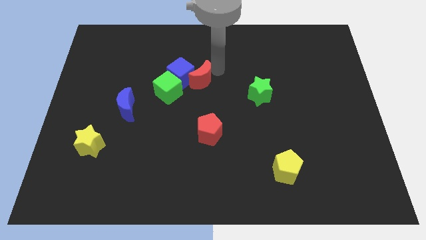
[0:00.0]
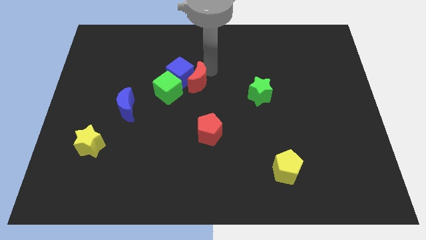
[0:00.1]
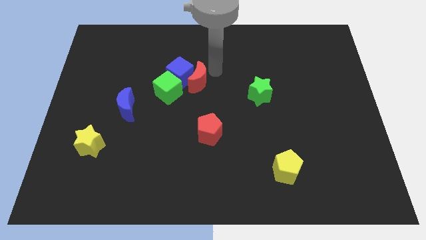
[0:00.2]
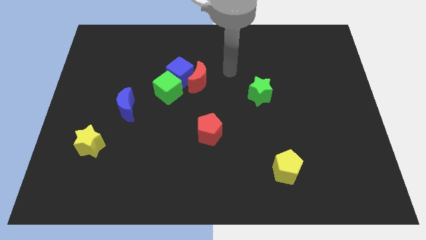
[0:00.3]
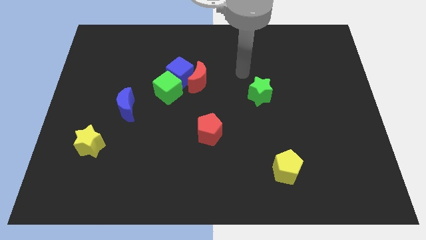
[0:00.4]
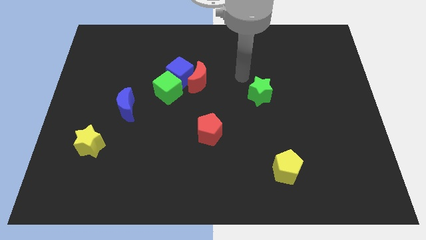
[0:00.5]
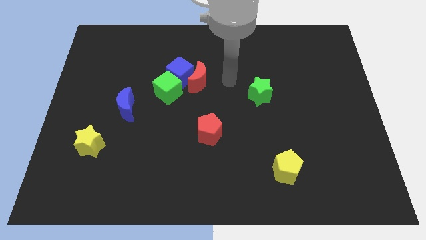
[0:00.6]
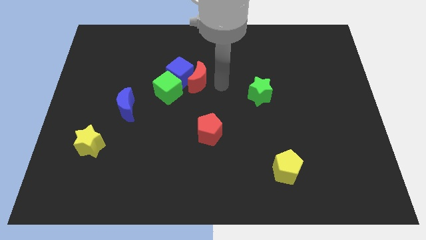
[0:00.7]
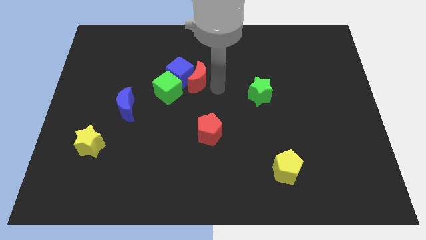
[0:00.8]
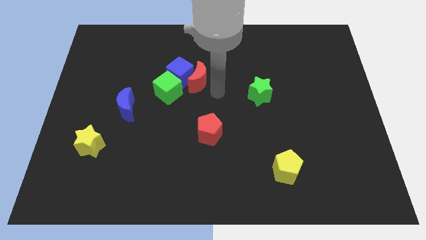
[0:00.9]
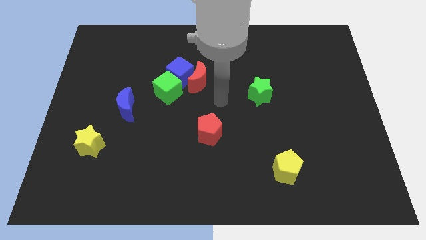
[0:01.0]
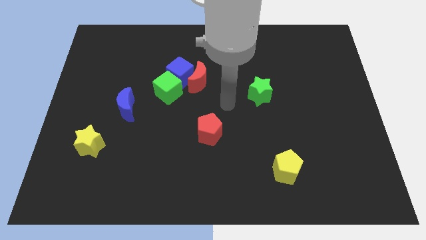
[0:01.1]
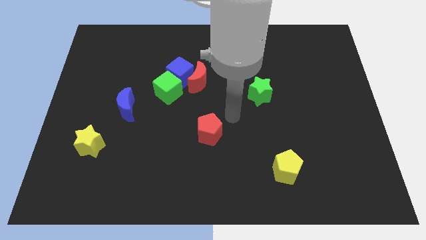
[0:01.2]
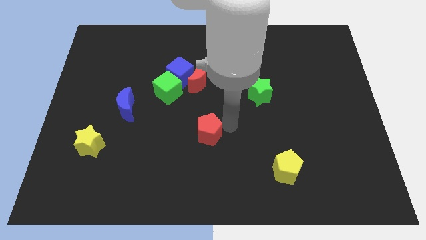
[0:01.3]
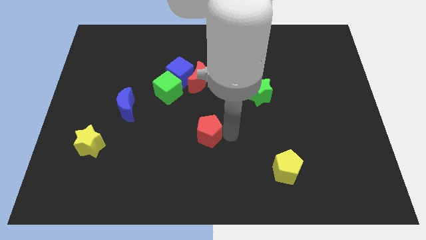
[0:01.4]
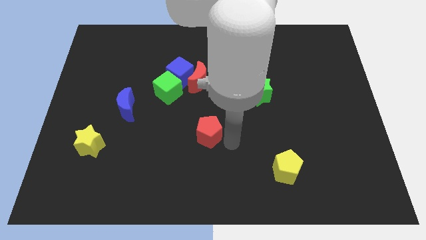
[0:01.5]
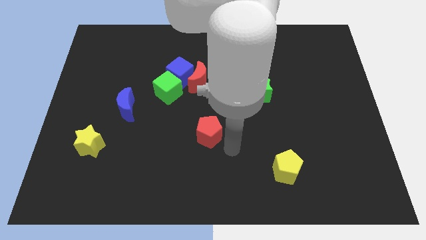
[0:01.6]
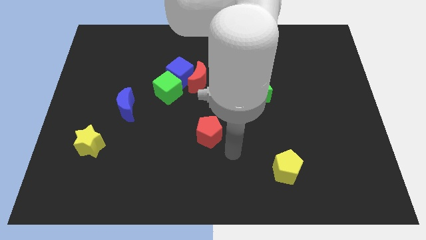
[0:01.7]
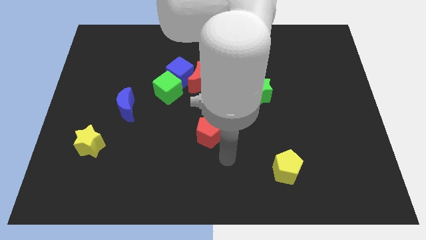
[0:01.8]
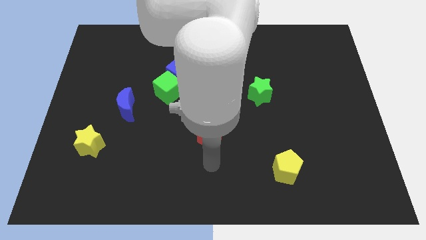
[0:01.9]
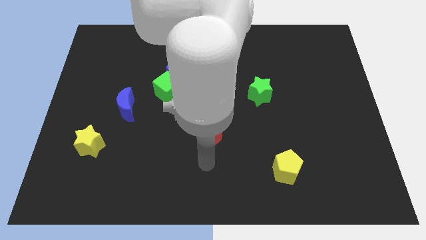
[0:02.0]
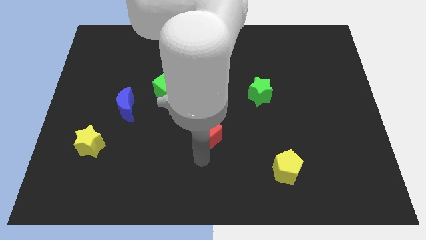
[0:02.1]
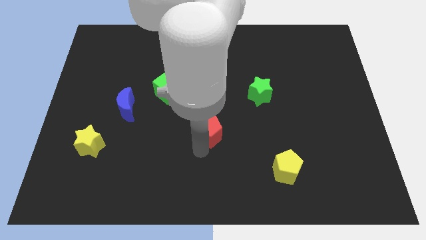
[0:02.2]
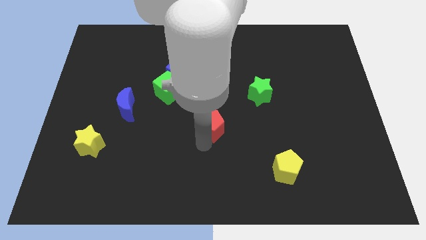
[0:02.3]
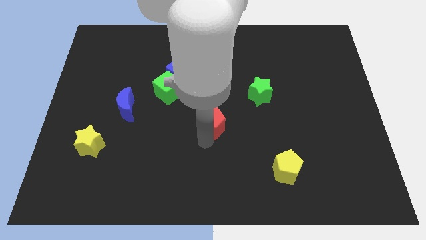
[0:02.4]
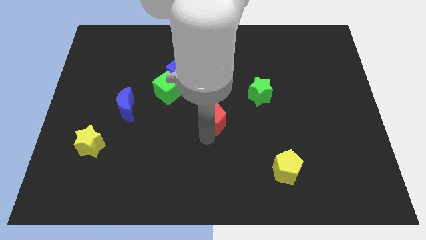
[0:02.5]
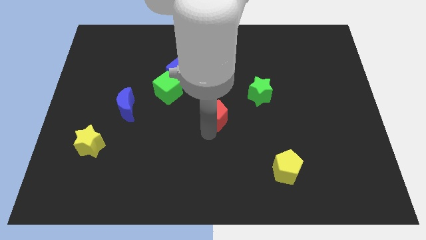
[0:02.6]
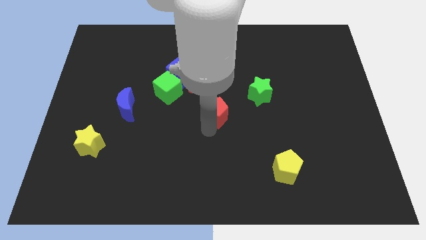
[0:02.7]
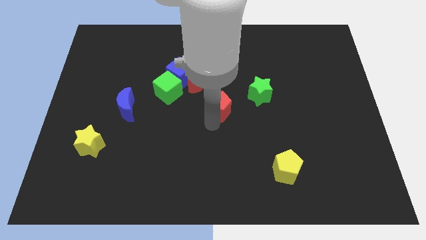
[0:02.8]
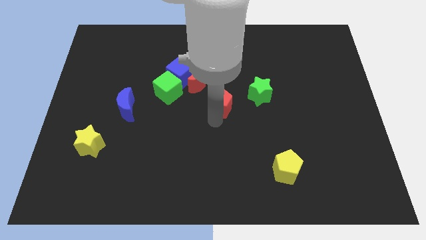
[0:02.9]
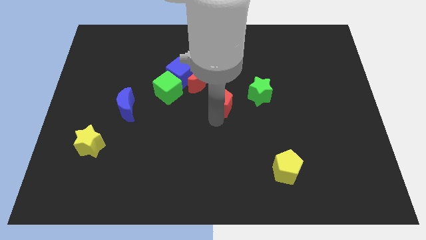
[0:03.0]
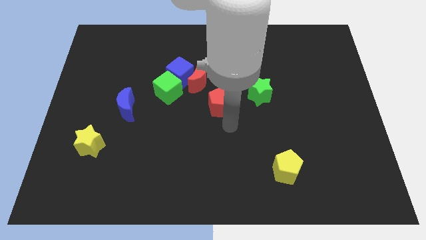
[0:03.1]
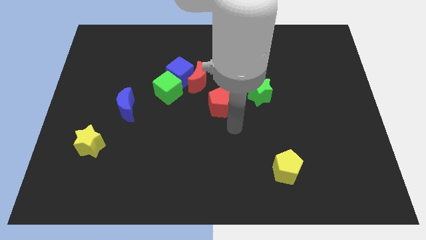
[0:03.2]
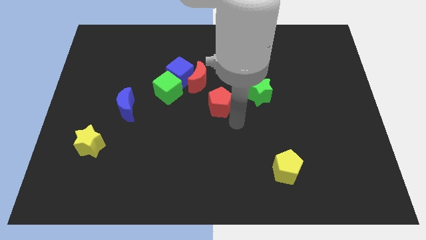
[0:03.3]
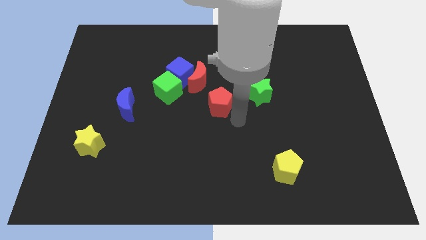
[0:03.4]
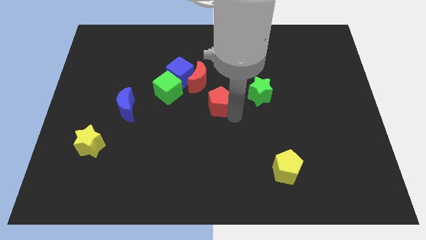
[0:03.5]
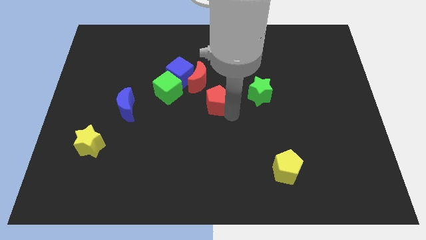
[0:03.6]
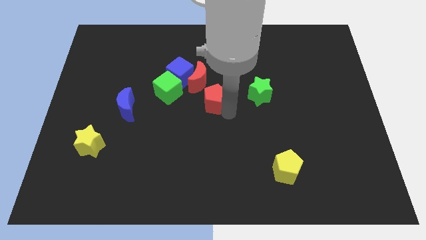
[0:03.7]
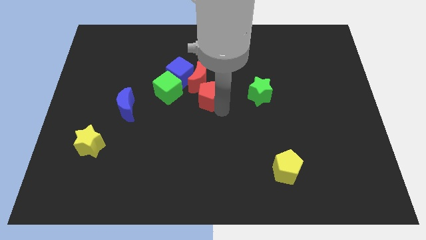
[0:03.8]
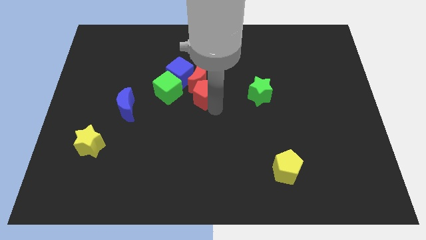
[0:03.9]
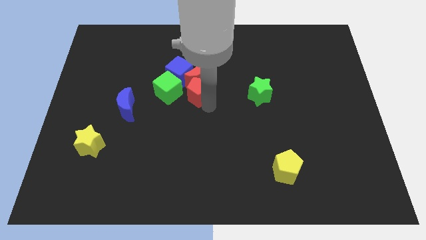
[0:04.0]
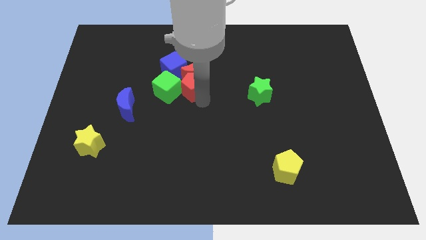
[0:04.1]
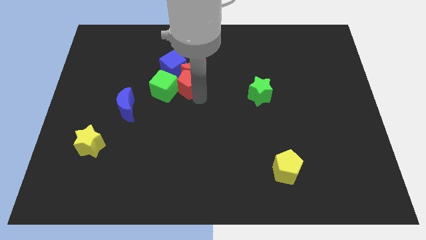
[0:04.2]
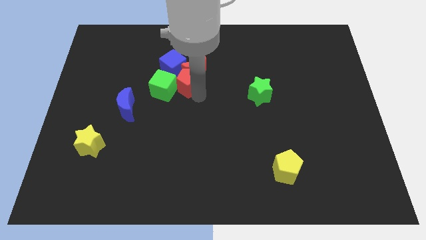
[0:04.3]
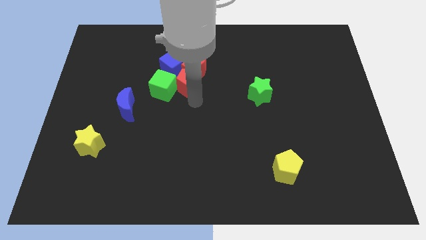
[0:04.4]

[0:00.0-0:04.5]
move the red pentagon into the group of blocks

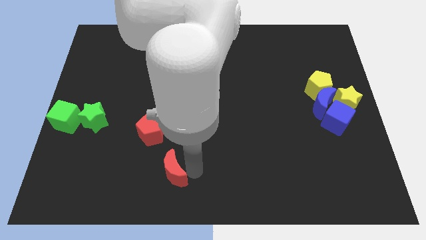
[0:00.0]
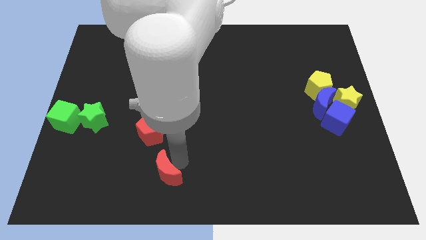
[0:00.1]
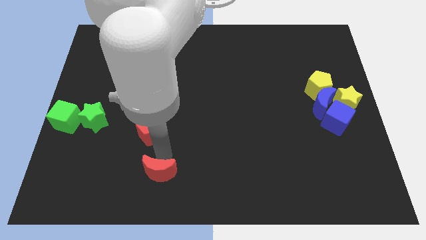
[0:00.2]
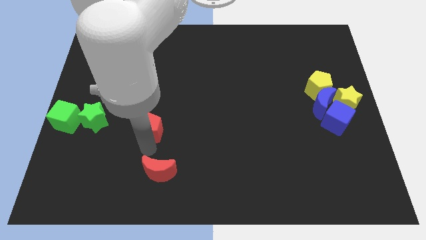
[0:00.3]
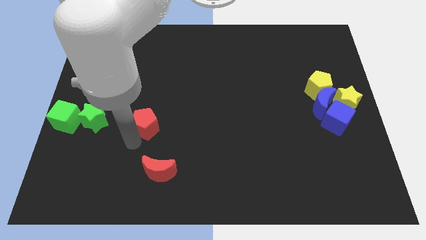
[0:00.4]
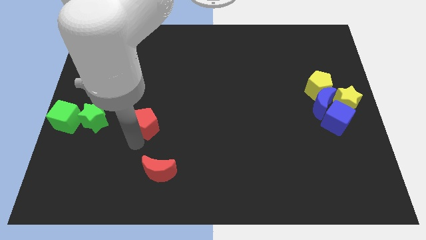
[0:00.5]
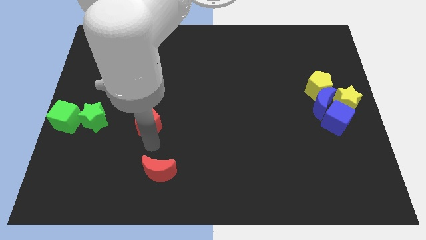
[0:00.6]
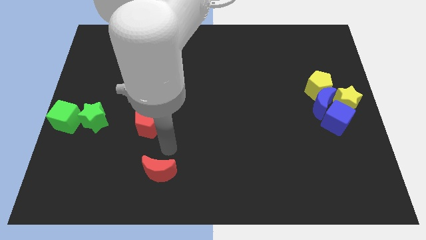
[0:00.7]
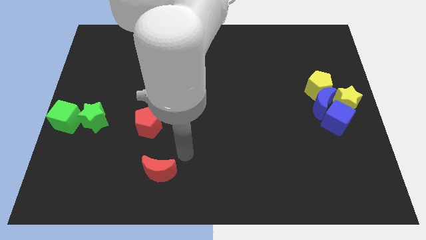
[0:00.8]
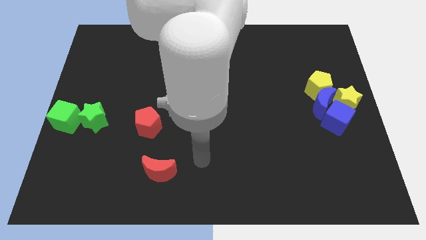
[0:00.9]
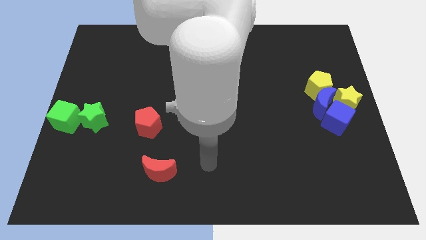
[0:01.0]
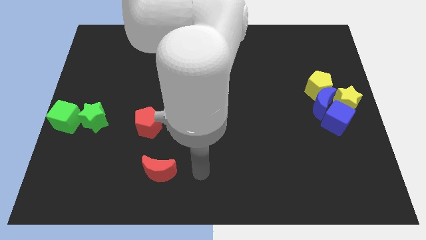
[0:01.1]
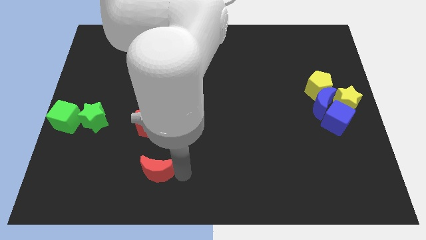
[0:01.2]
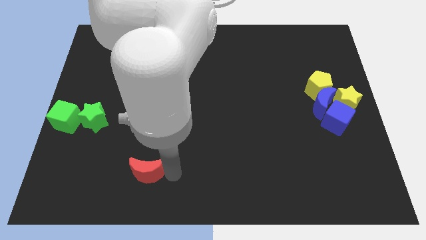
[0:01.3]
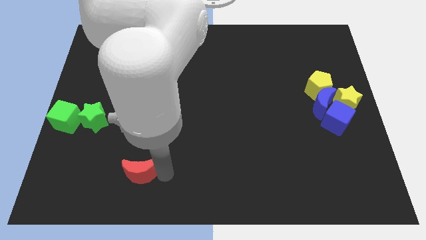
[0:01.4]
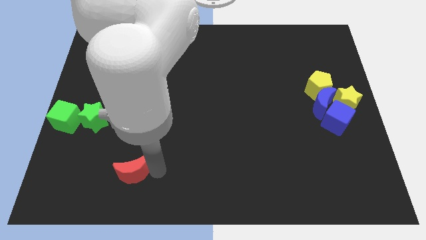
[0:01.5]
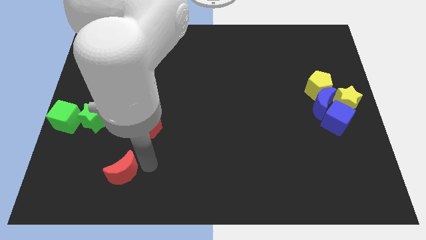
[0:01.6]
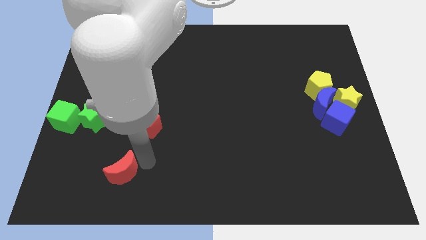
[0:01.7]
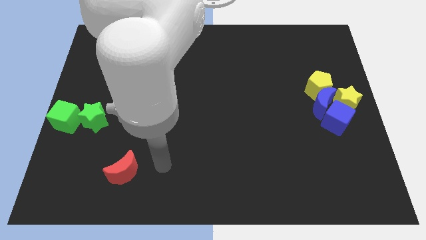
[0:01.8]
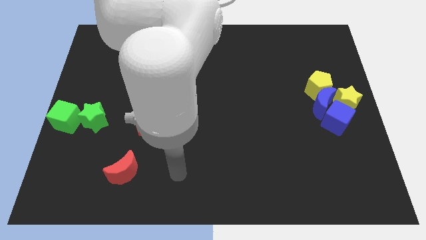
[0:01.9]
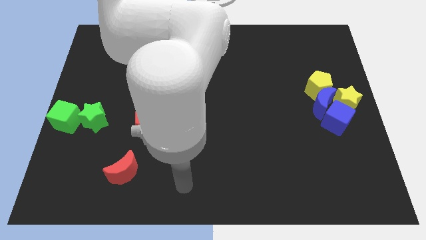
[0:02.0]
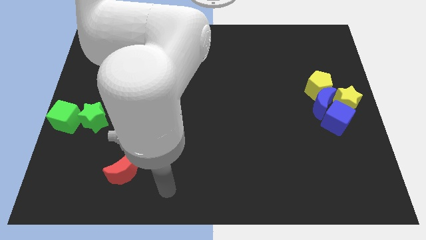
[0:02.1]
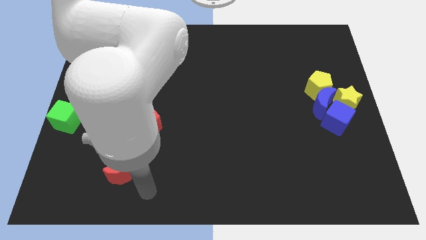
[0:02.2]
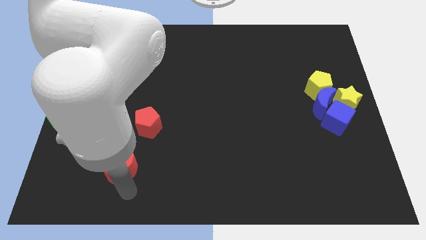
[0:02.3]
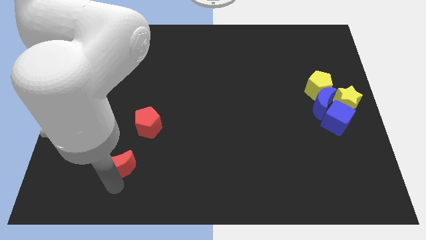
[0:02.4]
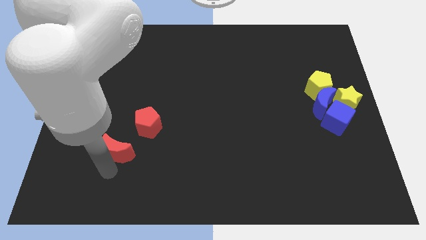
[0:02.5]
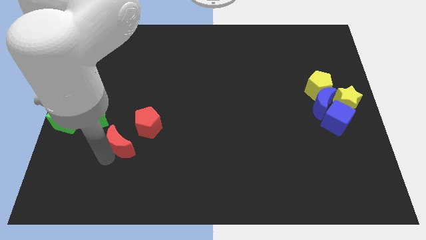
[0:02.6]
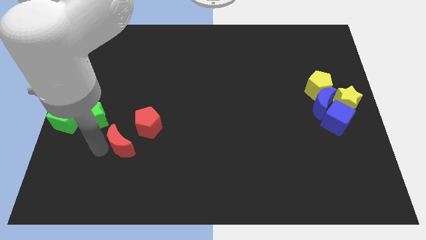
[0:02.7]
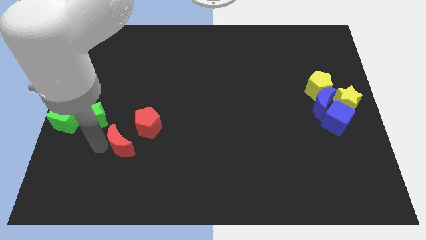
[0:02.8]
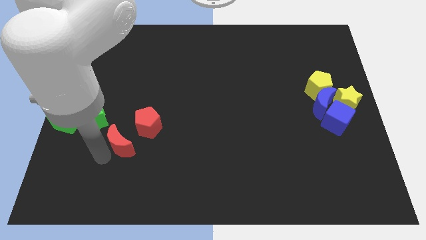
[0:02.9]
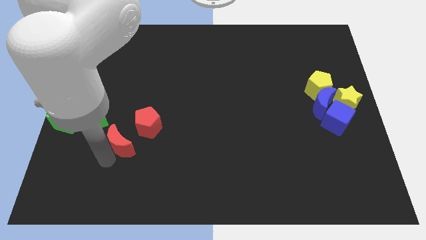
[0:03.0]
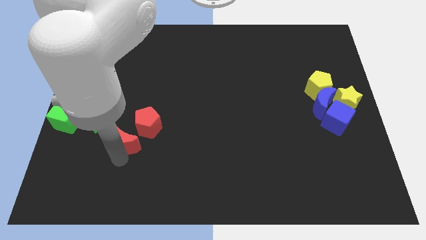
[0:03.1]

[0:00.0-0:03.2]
place the red moon diagonally bottom left to the red pentagon

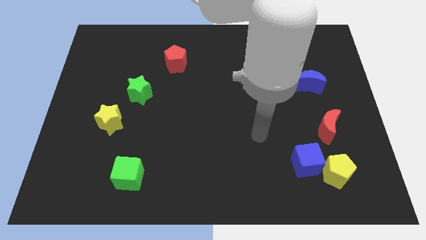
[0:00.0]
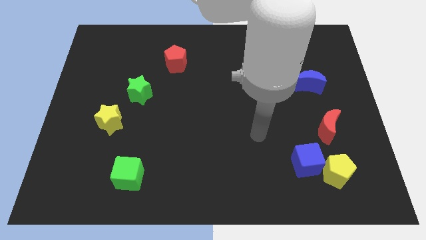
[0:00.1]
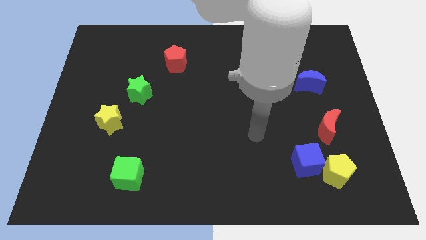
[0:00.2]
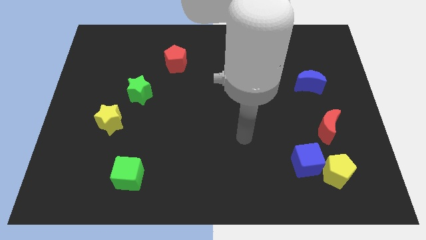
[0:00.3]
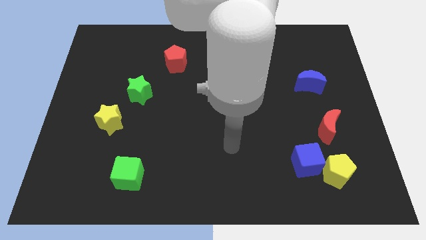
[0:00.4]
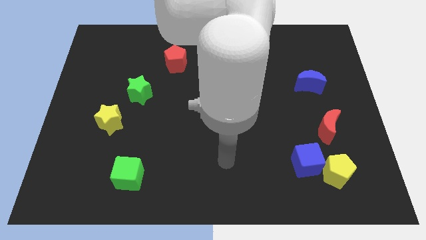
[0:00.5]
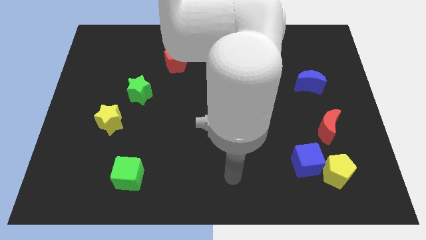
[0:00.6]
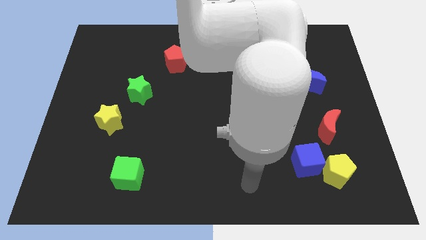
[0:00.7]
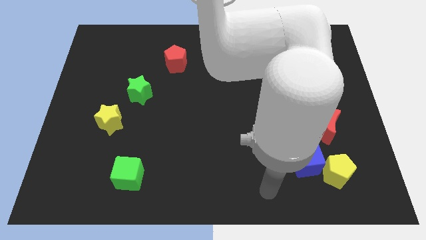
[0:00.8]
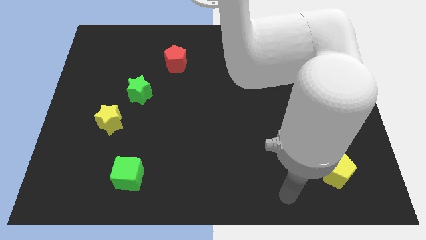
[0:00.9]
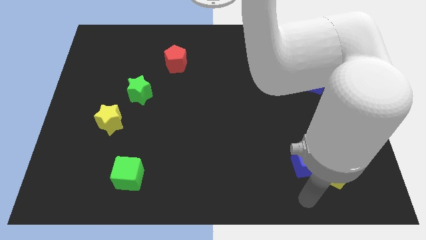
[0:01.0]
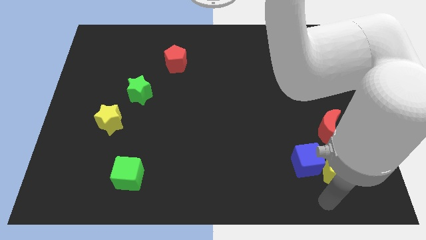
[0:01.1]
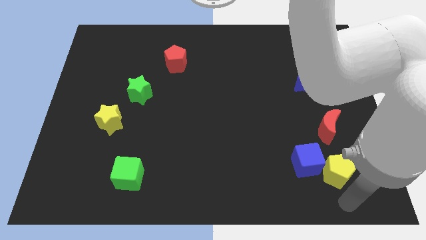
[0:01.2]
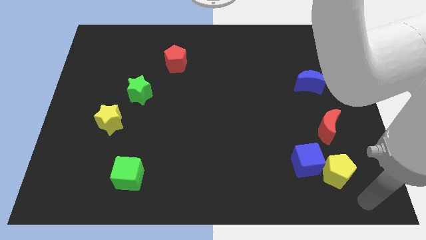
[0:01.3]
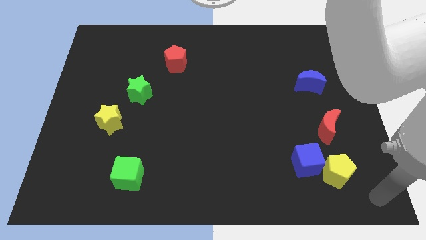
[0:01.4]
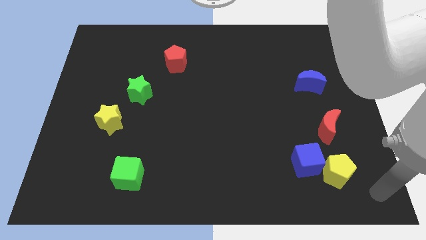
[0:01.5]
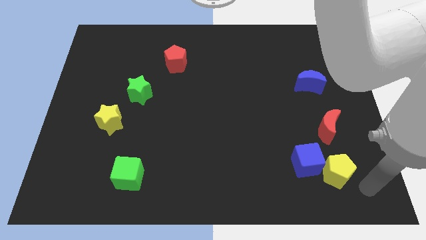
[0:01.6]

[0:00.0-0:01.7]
move your arm towards the bottom right corner
